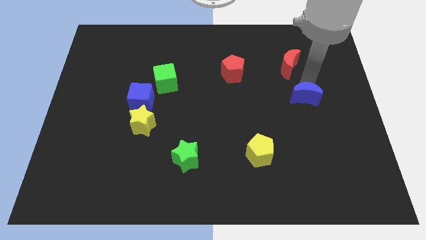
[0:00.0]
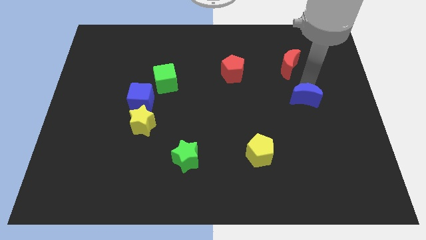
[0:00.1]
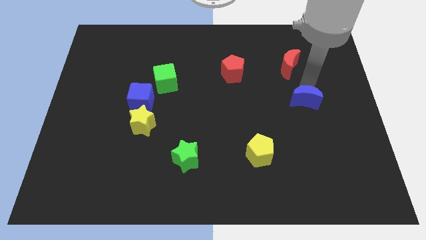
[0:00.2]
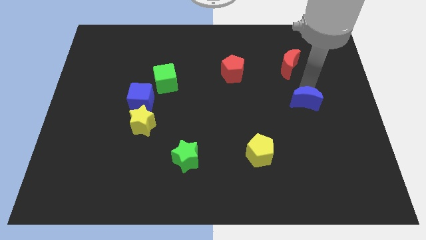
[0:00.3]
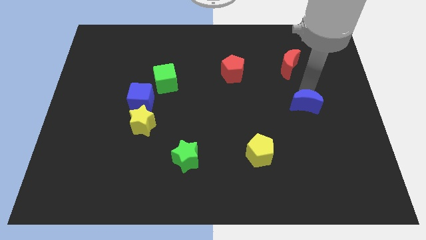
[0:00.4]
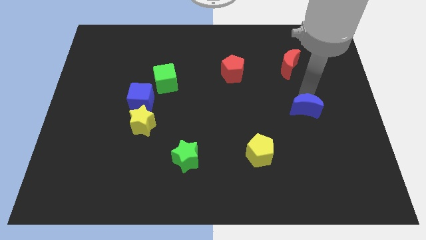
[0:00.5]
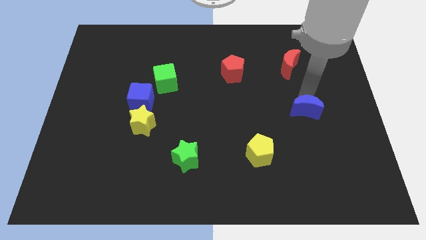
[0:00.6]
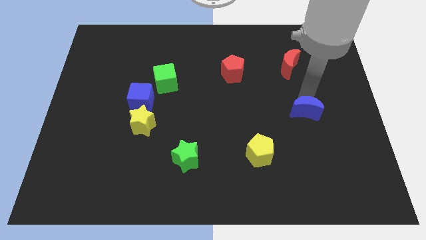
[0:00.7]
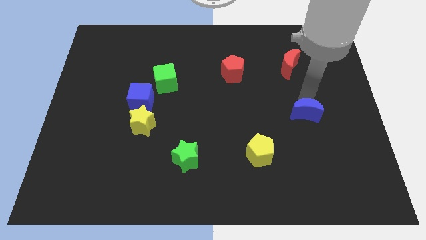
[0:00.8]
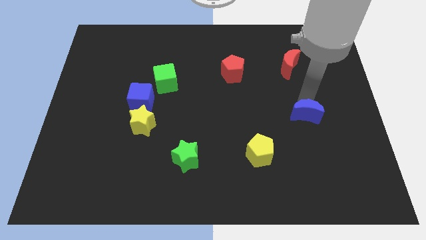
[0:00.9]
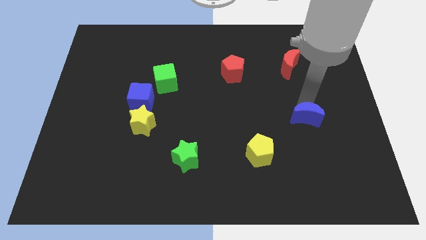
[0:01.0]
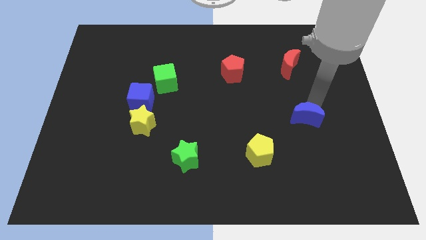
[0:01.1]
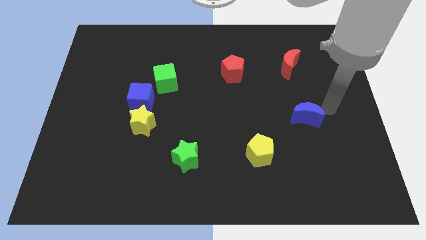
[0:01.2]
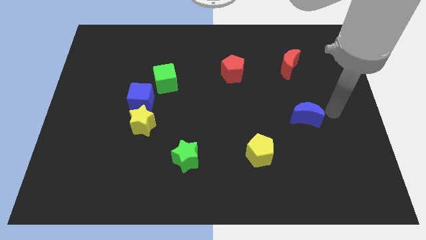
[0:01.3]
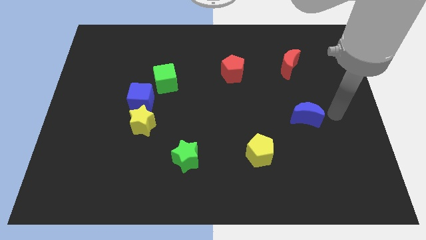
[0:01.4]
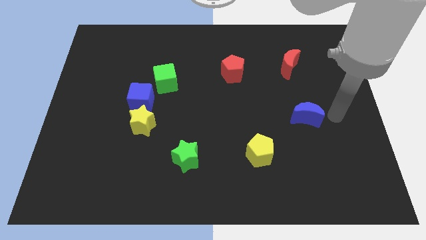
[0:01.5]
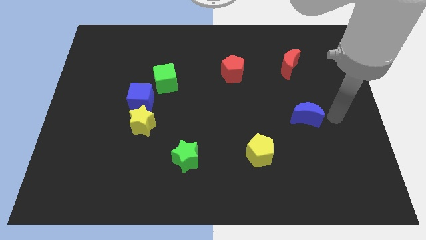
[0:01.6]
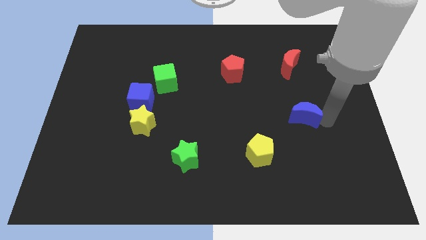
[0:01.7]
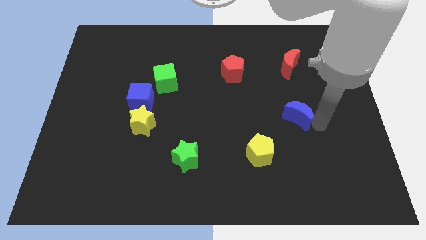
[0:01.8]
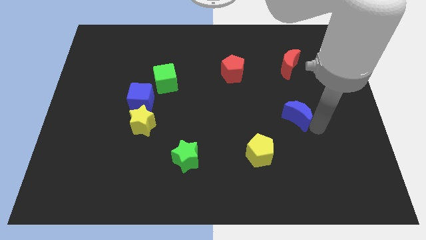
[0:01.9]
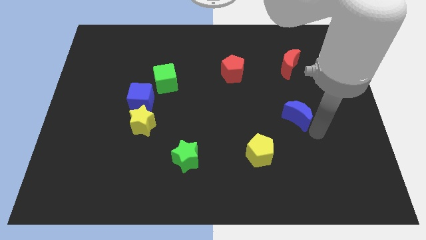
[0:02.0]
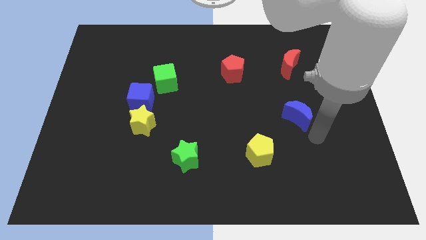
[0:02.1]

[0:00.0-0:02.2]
put the blue moon vertically below the red moon

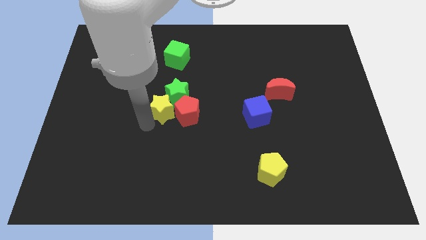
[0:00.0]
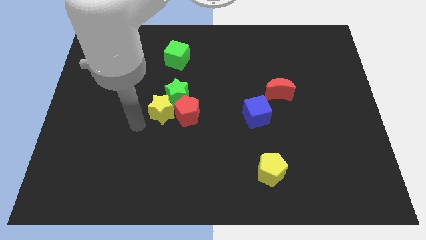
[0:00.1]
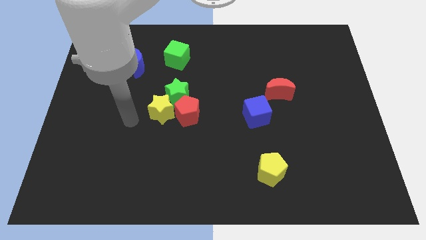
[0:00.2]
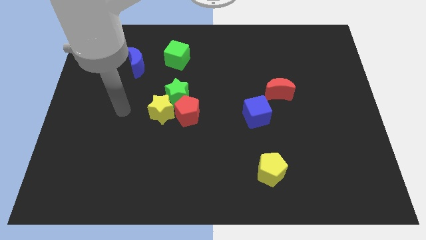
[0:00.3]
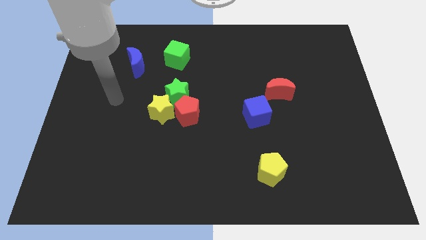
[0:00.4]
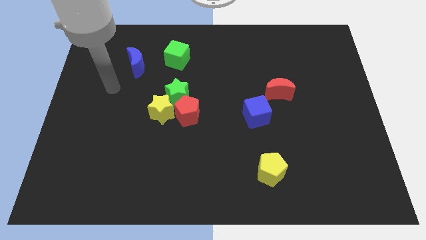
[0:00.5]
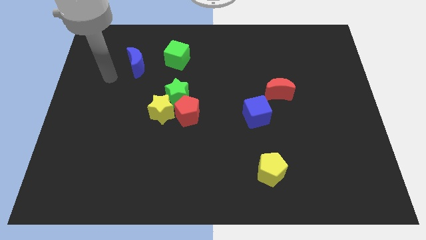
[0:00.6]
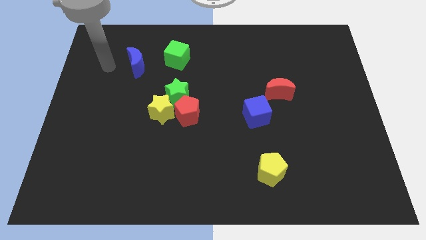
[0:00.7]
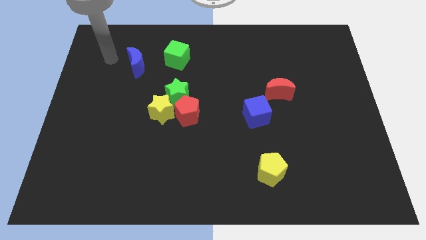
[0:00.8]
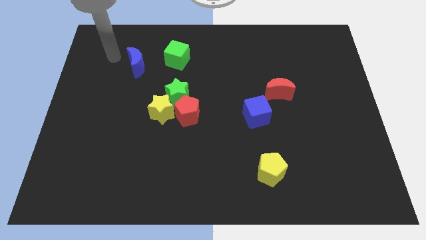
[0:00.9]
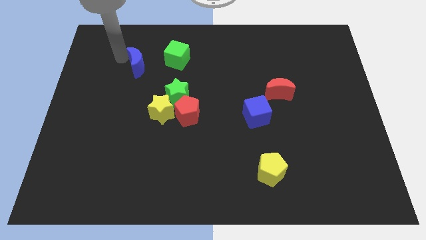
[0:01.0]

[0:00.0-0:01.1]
place your arm to the left of the blue moon

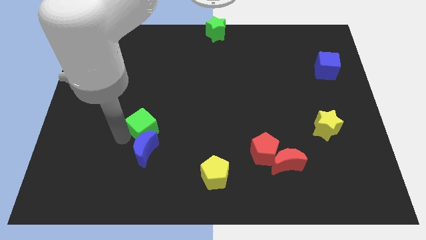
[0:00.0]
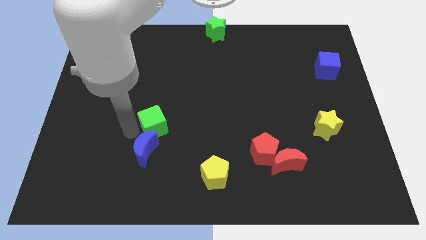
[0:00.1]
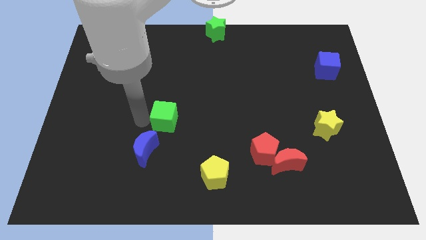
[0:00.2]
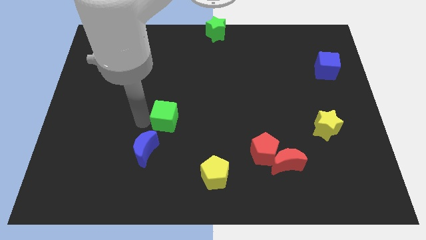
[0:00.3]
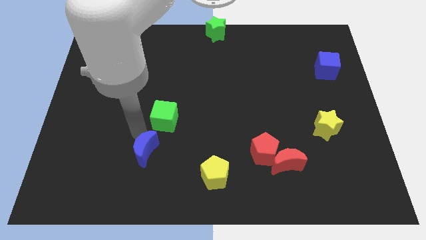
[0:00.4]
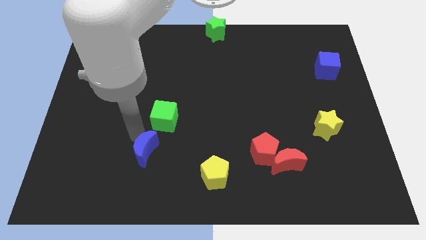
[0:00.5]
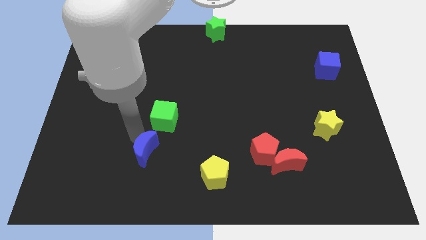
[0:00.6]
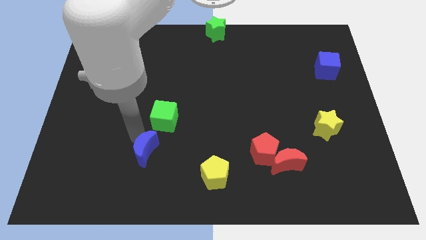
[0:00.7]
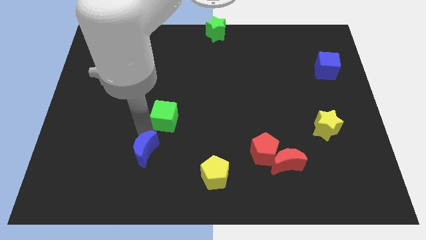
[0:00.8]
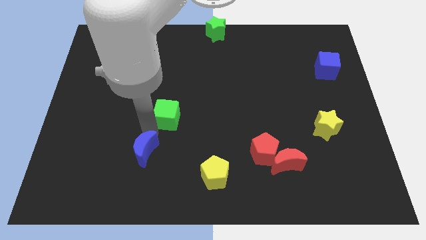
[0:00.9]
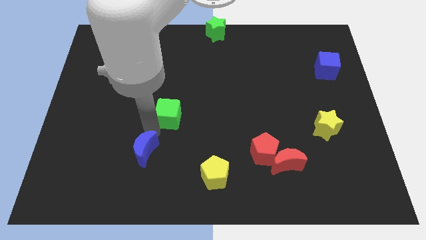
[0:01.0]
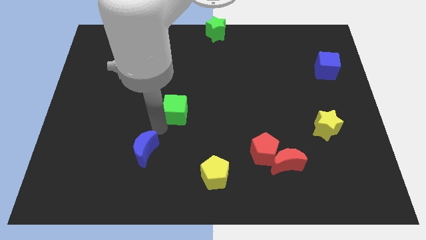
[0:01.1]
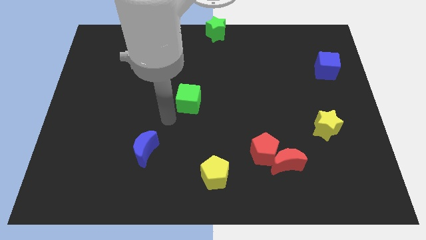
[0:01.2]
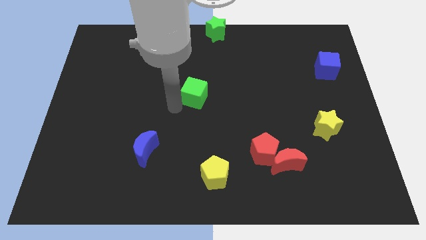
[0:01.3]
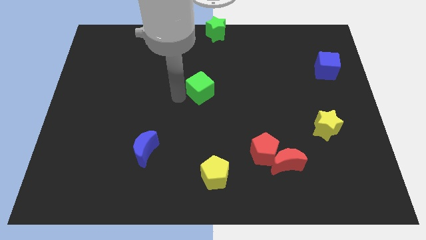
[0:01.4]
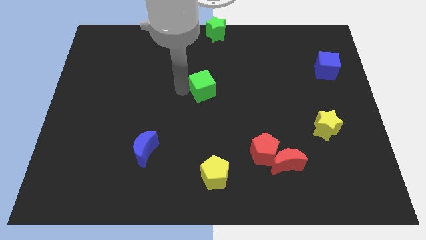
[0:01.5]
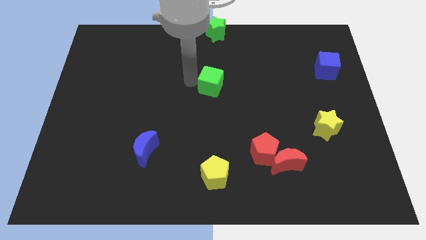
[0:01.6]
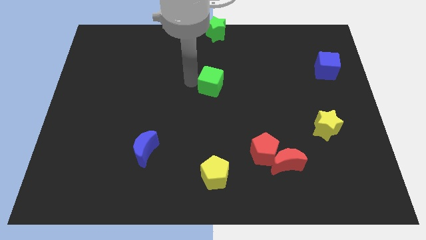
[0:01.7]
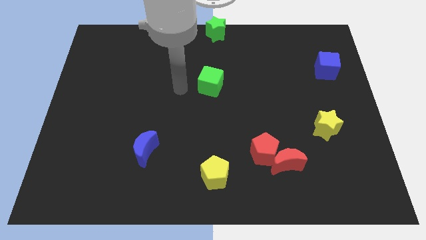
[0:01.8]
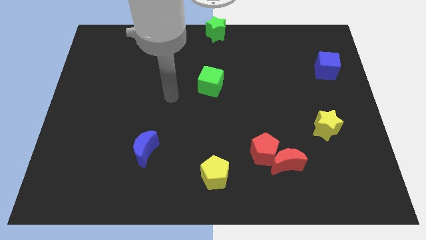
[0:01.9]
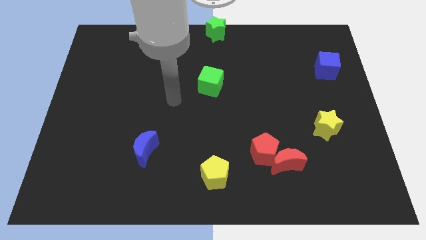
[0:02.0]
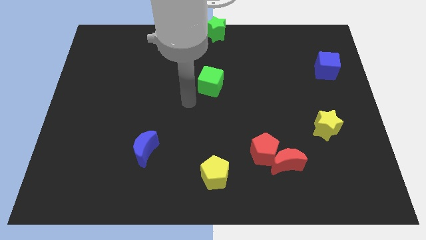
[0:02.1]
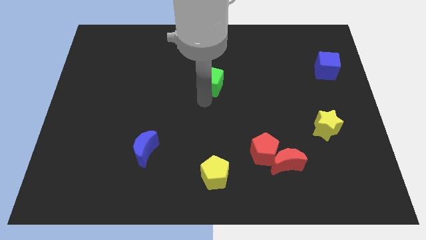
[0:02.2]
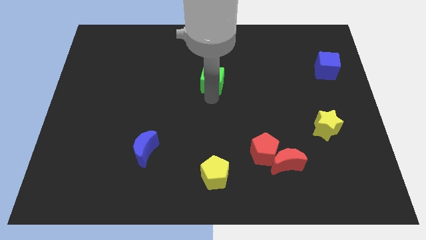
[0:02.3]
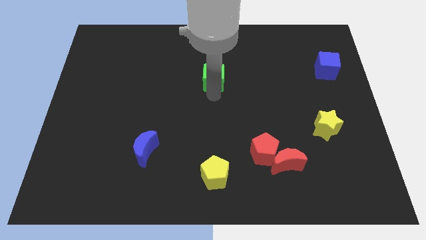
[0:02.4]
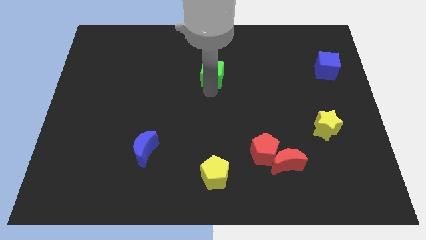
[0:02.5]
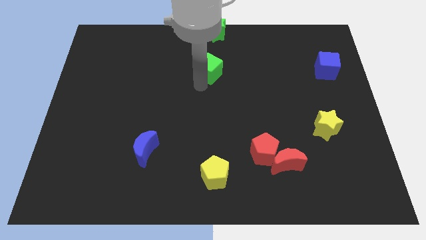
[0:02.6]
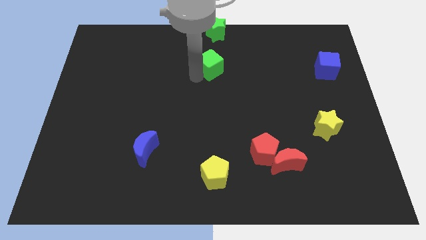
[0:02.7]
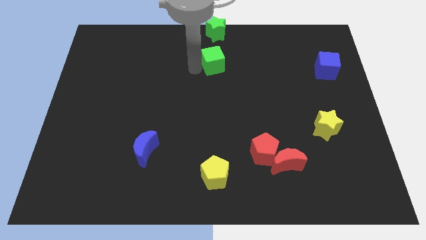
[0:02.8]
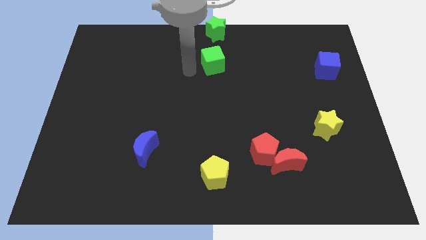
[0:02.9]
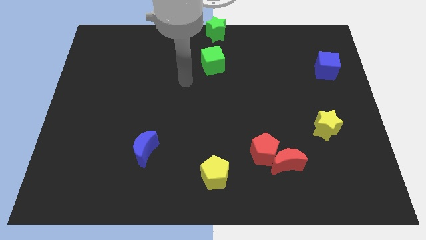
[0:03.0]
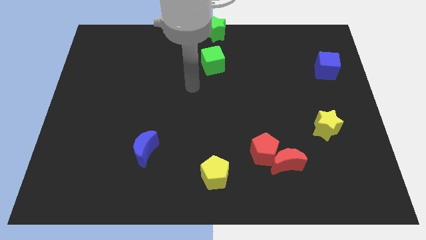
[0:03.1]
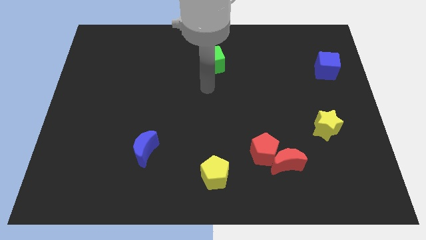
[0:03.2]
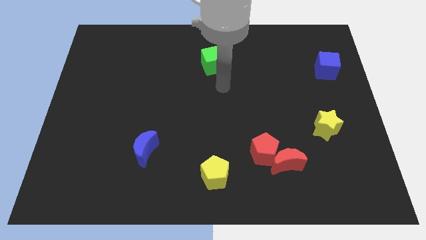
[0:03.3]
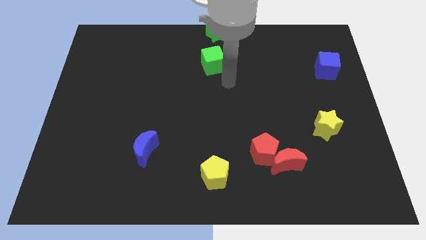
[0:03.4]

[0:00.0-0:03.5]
push the green cube to the bottom of the green star

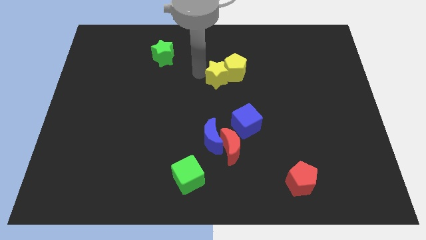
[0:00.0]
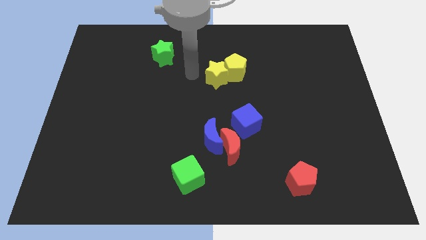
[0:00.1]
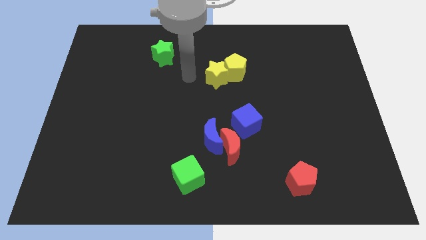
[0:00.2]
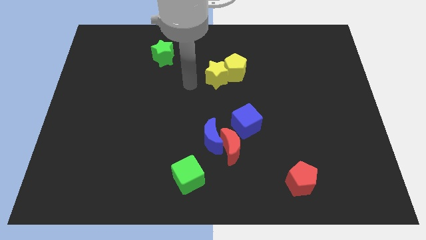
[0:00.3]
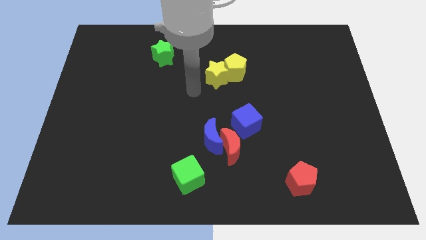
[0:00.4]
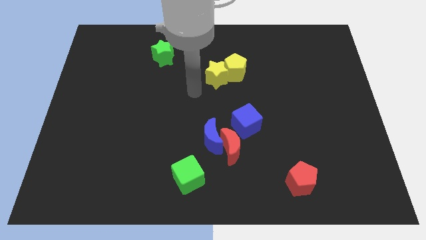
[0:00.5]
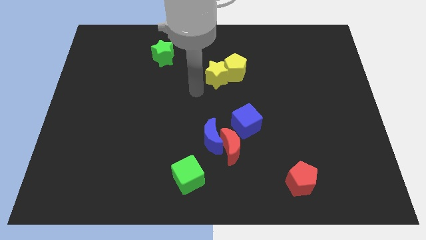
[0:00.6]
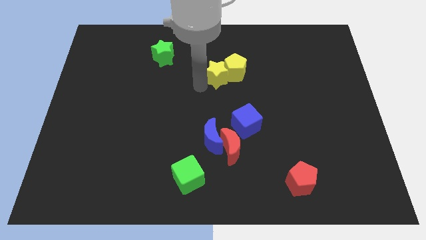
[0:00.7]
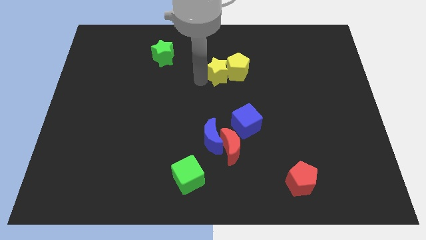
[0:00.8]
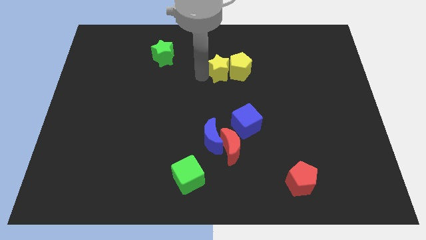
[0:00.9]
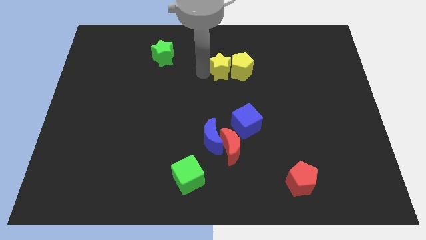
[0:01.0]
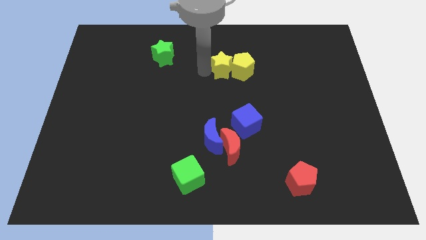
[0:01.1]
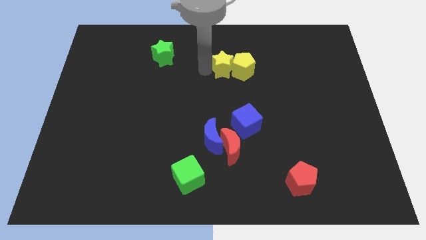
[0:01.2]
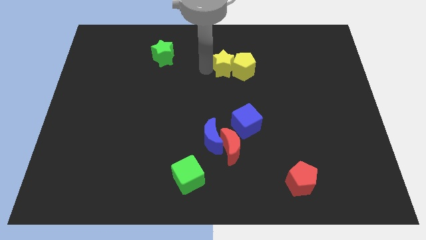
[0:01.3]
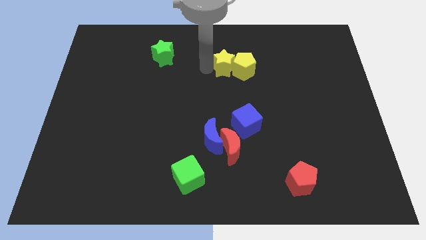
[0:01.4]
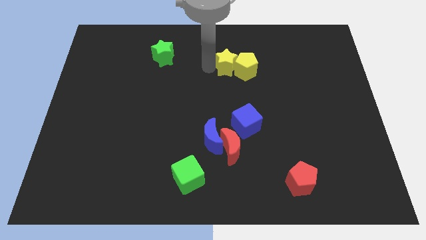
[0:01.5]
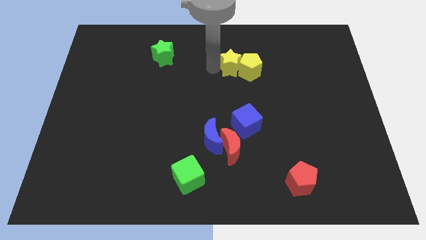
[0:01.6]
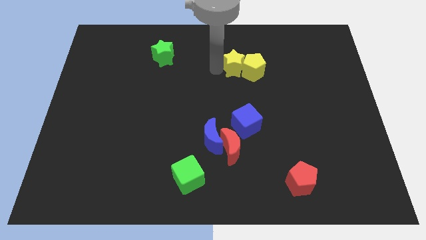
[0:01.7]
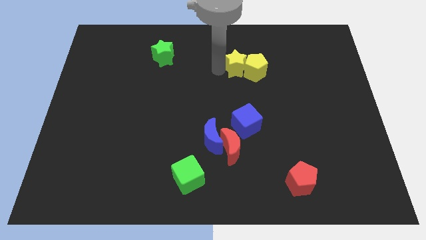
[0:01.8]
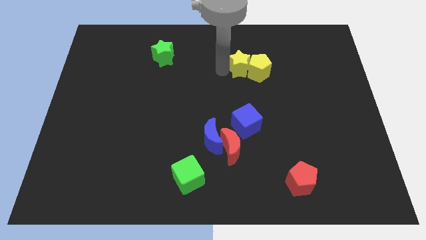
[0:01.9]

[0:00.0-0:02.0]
push the yellow blocks slightly to the right
